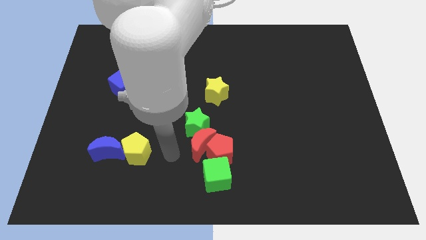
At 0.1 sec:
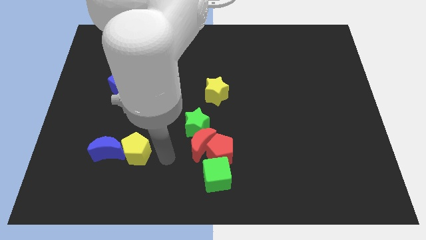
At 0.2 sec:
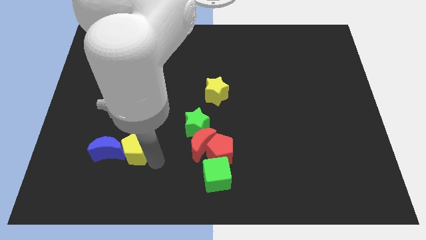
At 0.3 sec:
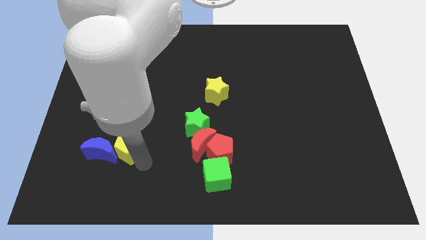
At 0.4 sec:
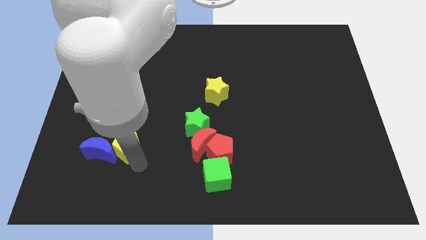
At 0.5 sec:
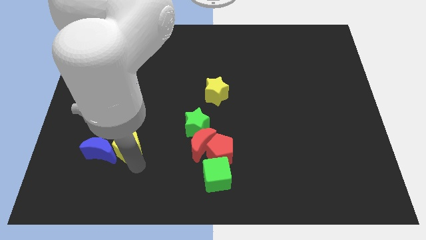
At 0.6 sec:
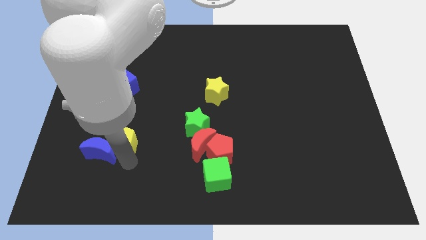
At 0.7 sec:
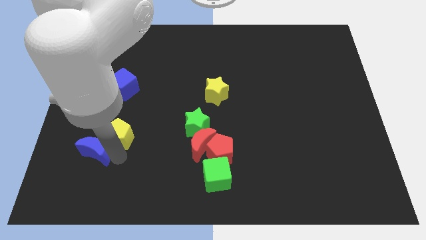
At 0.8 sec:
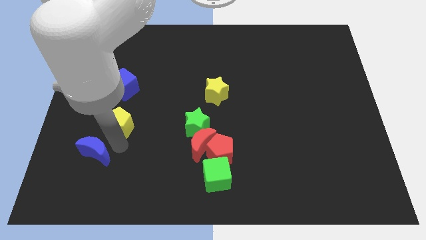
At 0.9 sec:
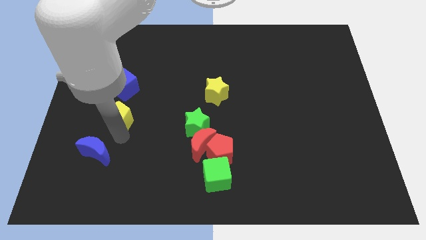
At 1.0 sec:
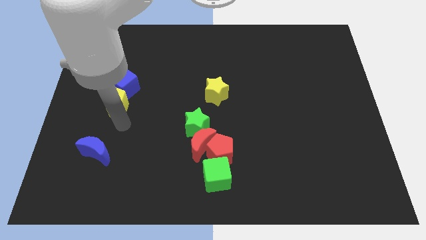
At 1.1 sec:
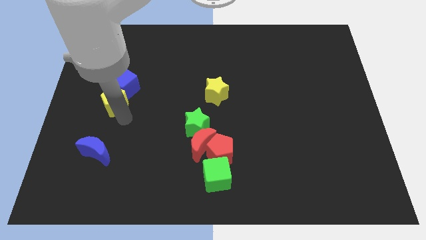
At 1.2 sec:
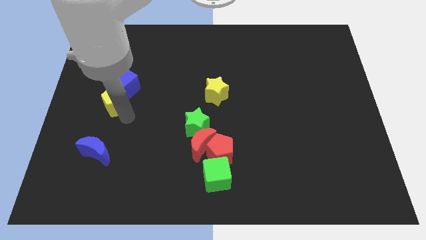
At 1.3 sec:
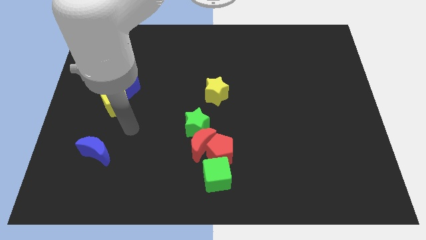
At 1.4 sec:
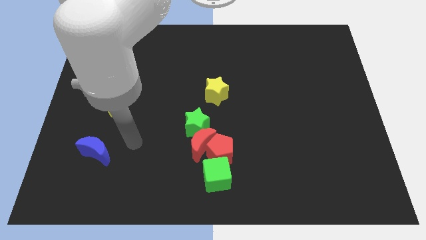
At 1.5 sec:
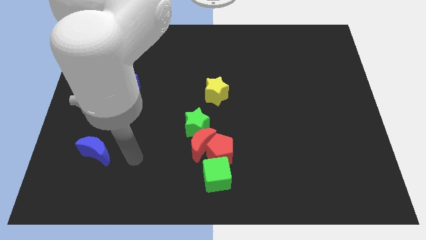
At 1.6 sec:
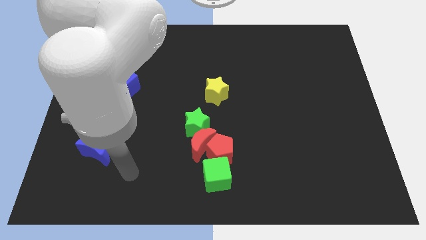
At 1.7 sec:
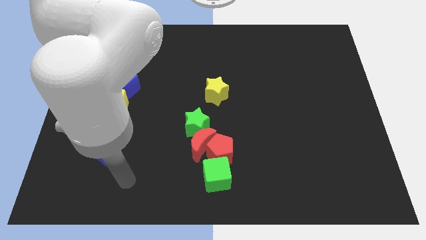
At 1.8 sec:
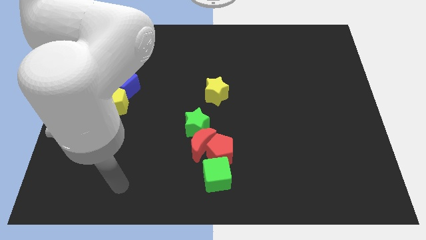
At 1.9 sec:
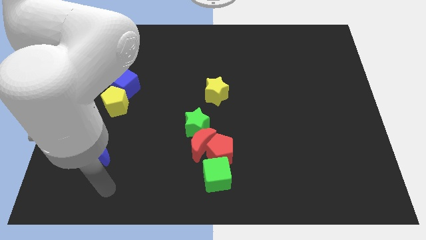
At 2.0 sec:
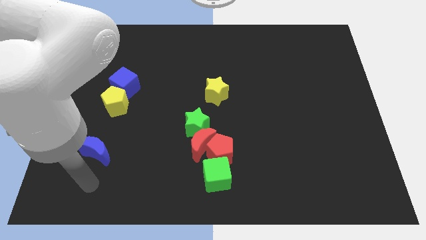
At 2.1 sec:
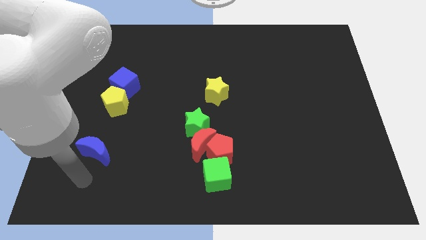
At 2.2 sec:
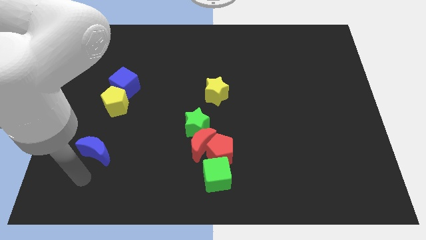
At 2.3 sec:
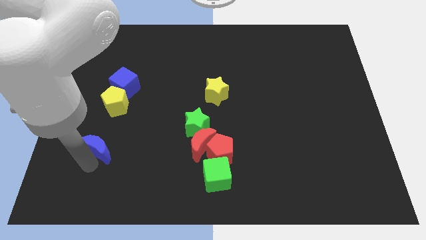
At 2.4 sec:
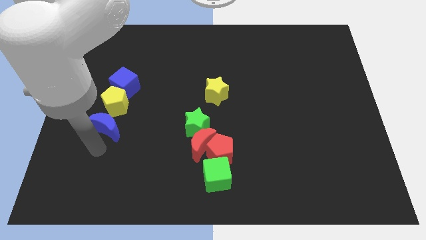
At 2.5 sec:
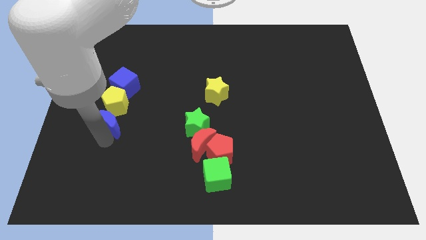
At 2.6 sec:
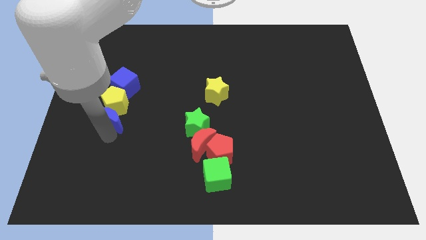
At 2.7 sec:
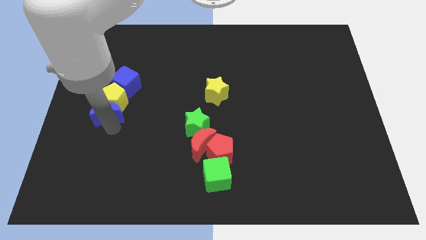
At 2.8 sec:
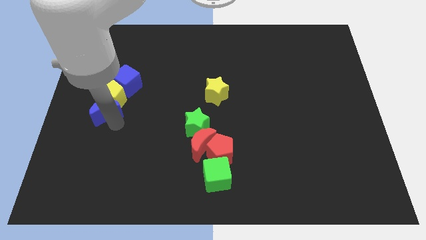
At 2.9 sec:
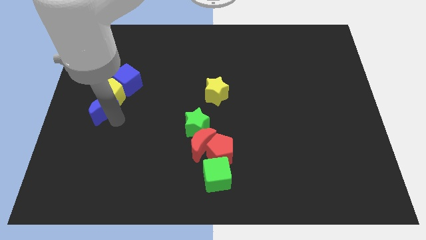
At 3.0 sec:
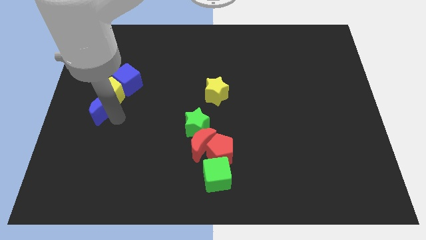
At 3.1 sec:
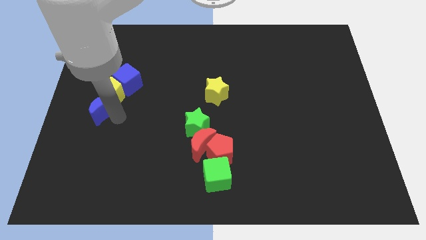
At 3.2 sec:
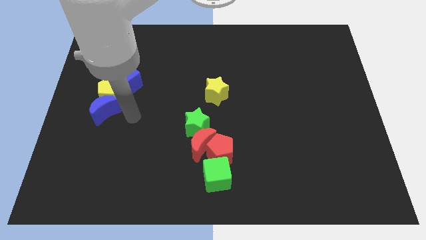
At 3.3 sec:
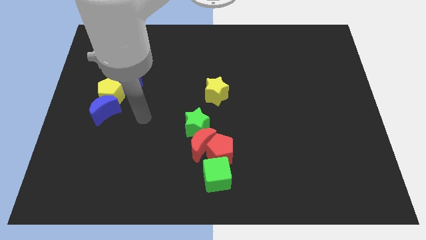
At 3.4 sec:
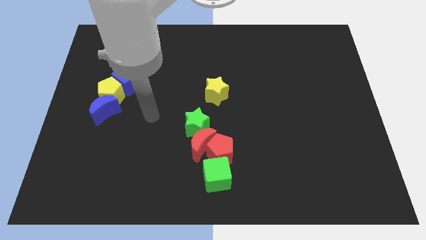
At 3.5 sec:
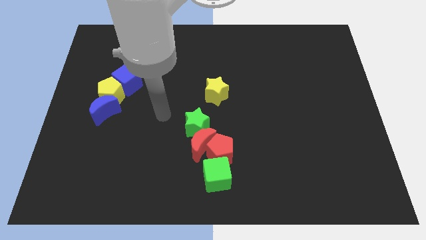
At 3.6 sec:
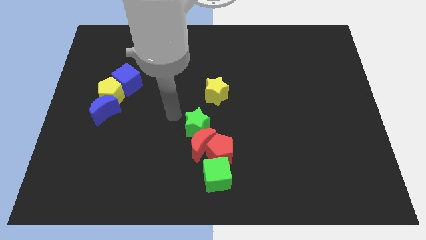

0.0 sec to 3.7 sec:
place the yellow pentagon close to the blue cube

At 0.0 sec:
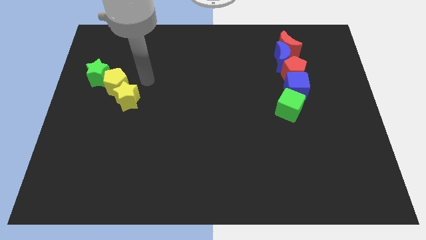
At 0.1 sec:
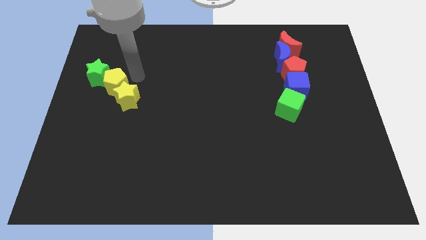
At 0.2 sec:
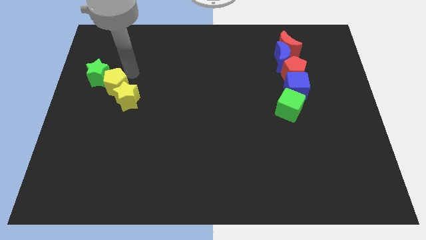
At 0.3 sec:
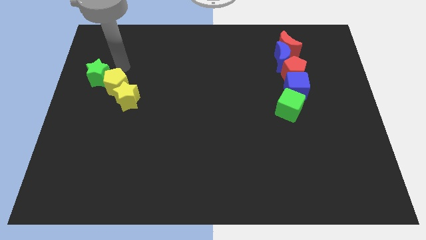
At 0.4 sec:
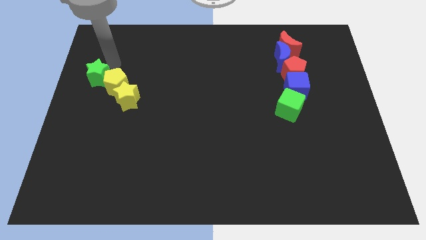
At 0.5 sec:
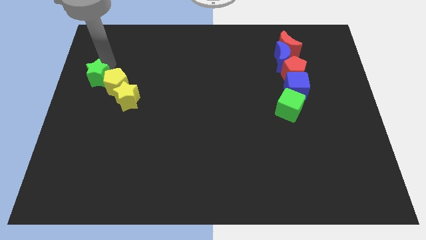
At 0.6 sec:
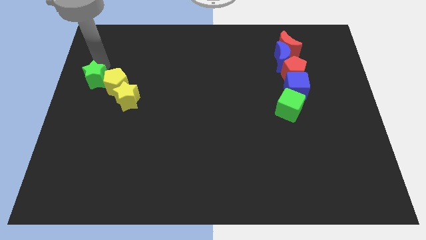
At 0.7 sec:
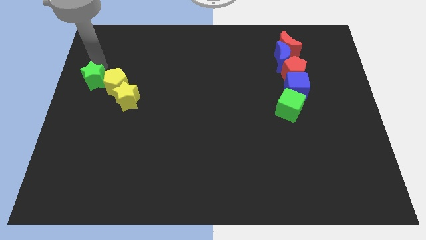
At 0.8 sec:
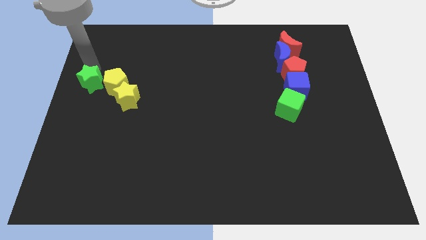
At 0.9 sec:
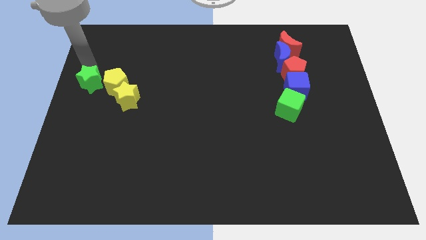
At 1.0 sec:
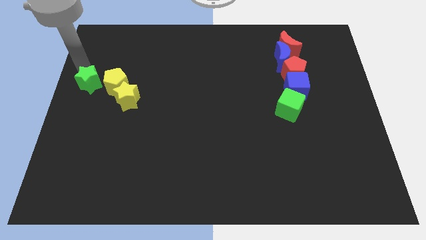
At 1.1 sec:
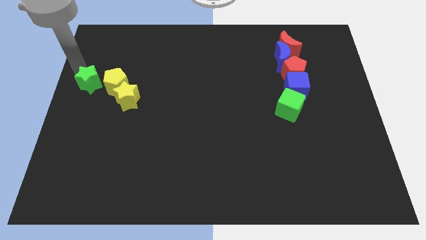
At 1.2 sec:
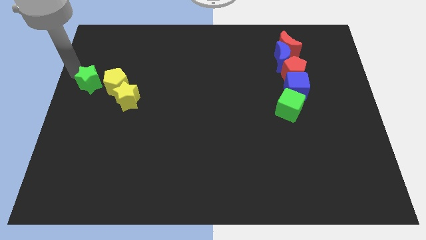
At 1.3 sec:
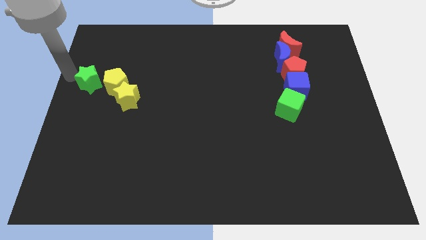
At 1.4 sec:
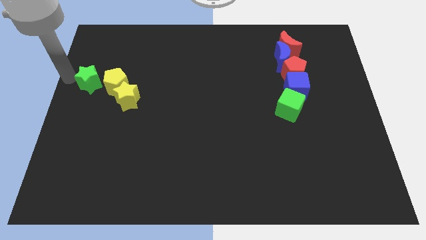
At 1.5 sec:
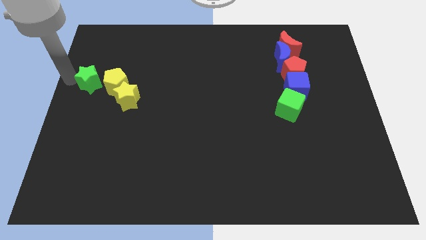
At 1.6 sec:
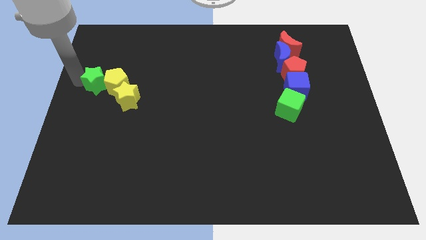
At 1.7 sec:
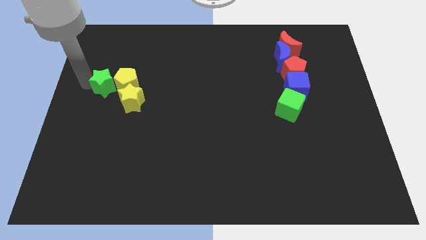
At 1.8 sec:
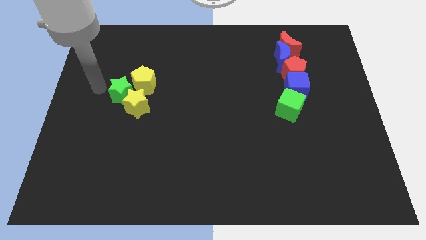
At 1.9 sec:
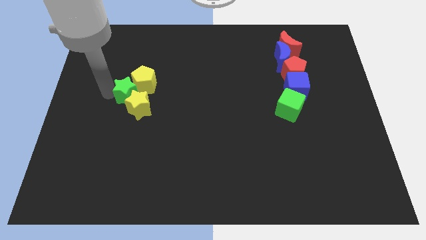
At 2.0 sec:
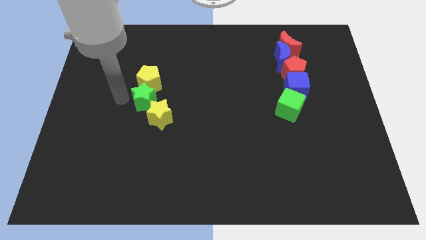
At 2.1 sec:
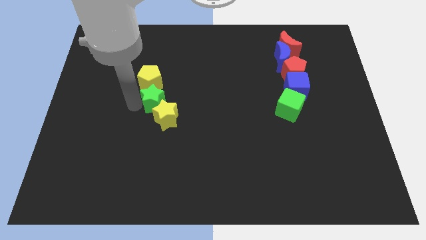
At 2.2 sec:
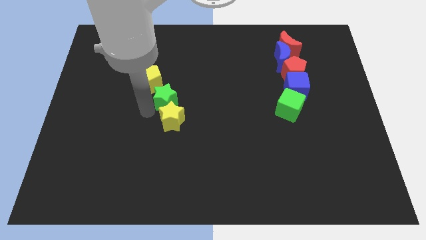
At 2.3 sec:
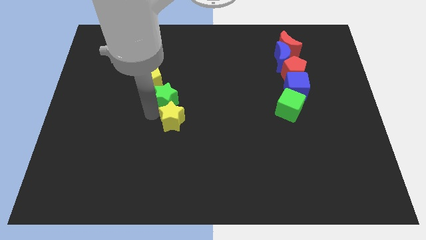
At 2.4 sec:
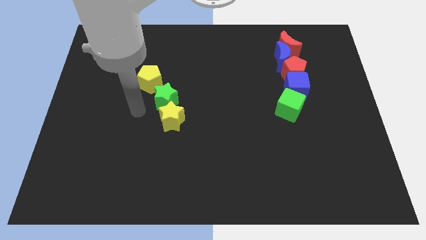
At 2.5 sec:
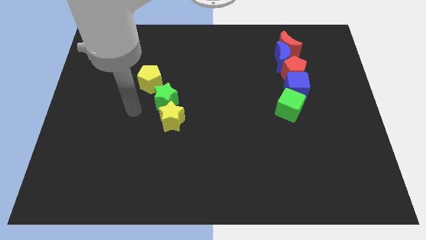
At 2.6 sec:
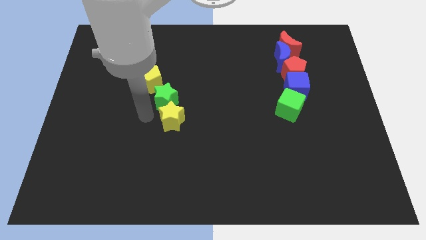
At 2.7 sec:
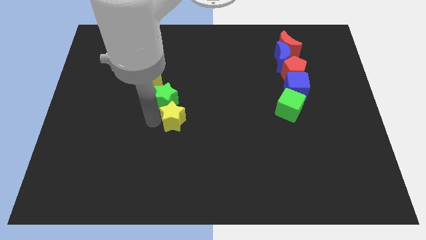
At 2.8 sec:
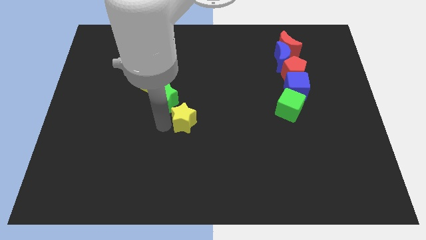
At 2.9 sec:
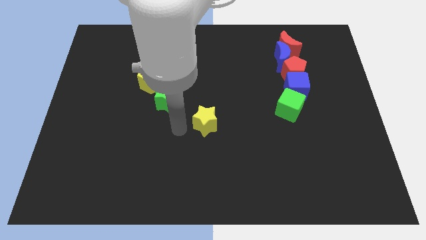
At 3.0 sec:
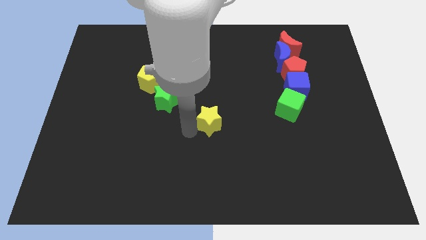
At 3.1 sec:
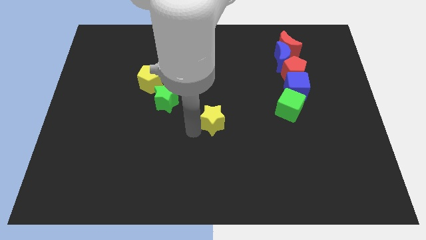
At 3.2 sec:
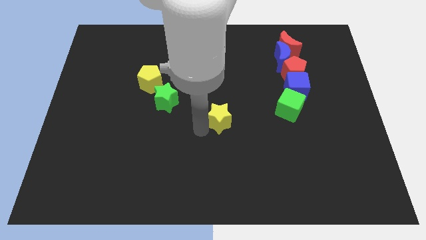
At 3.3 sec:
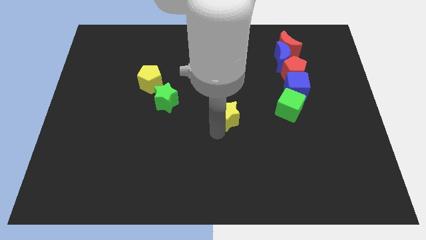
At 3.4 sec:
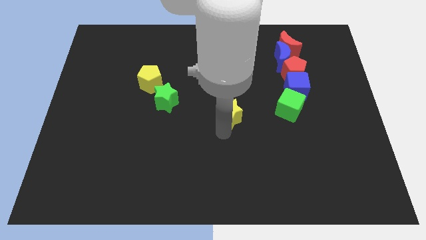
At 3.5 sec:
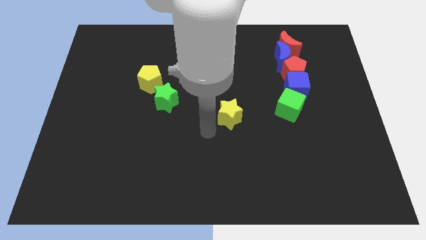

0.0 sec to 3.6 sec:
move the yellow star towards the center side

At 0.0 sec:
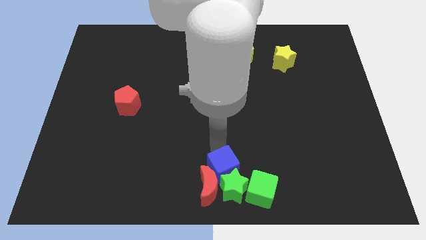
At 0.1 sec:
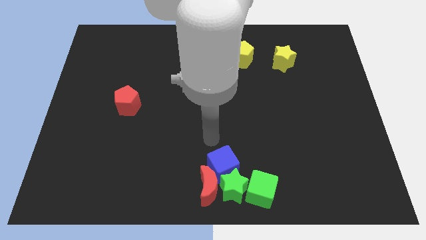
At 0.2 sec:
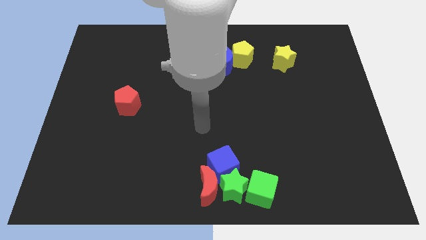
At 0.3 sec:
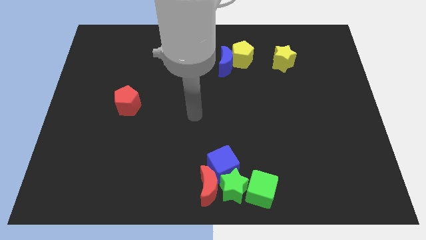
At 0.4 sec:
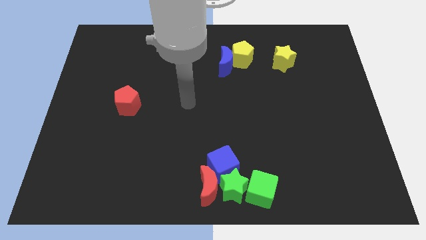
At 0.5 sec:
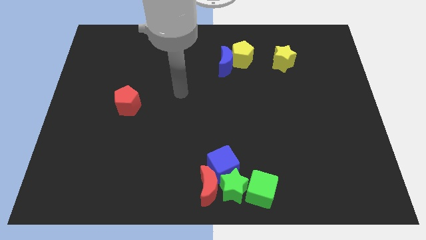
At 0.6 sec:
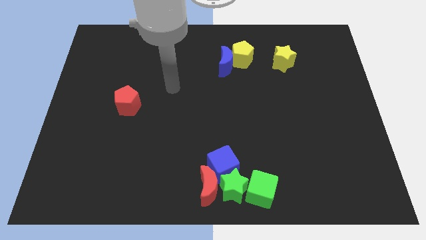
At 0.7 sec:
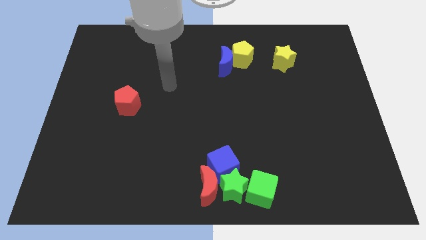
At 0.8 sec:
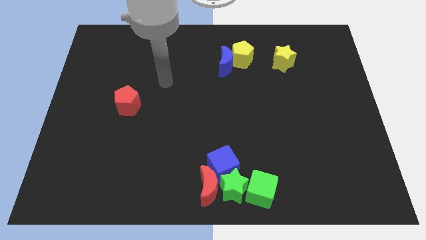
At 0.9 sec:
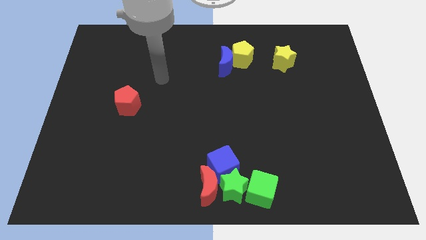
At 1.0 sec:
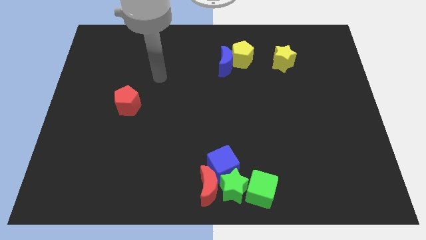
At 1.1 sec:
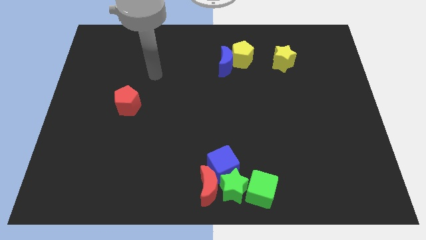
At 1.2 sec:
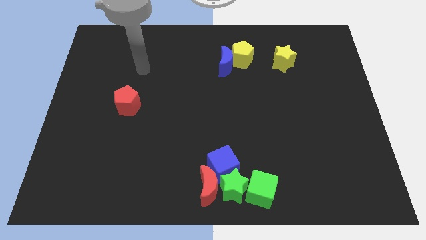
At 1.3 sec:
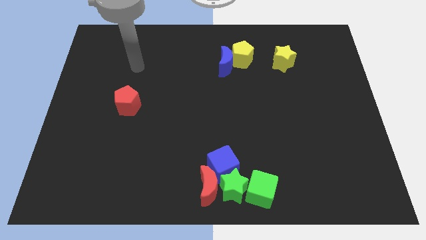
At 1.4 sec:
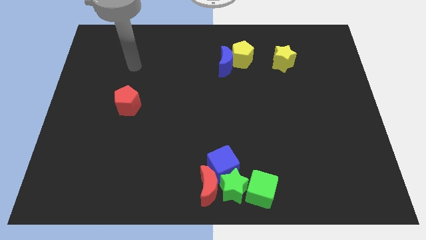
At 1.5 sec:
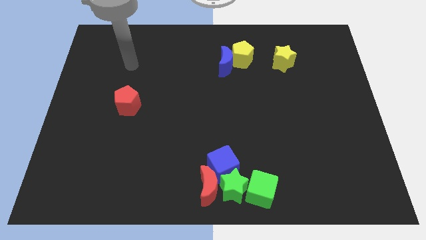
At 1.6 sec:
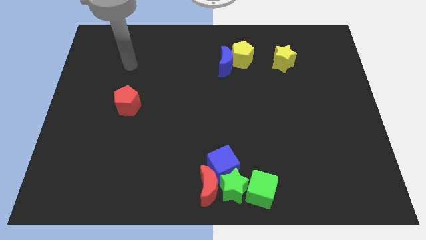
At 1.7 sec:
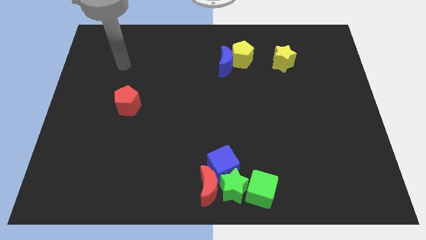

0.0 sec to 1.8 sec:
point your arm at the top of the red pentagon
